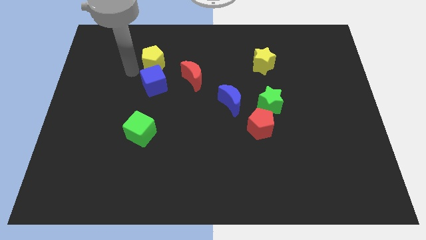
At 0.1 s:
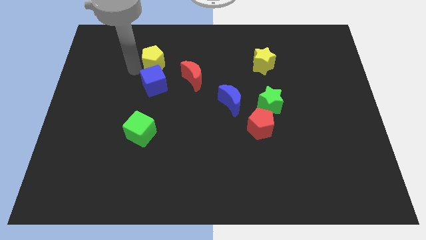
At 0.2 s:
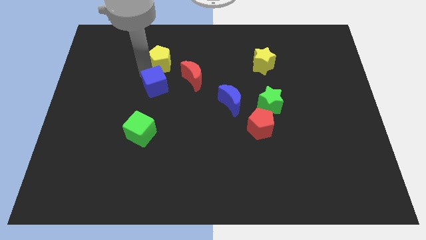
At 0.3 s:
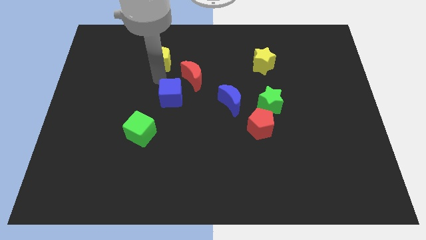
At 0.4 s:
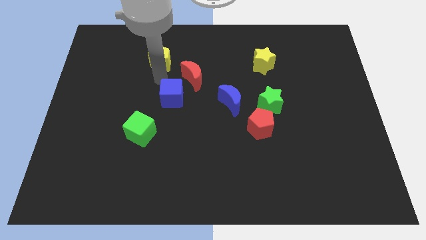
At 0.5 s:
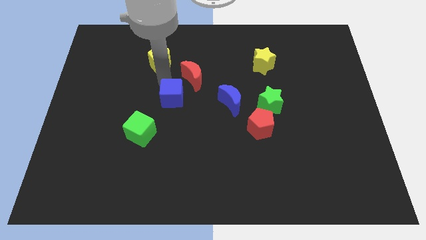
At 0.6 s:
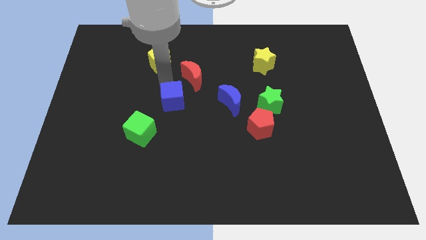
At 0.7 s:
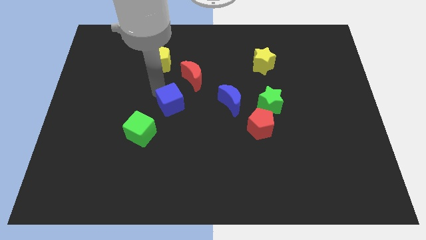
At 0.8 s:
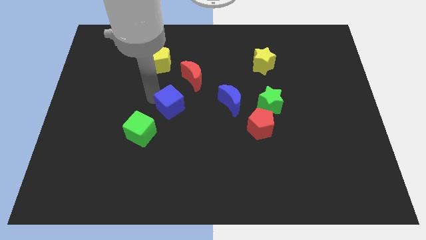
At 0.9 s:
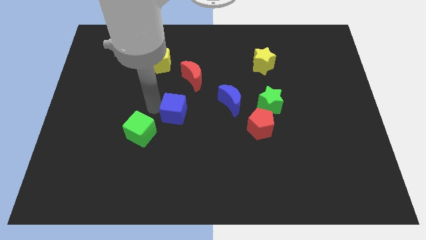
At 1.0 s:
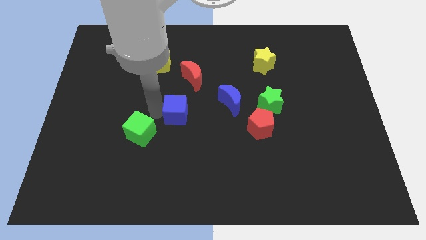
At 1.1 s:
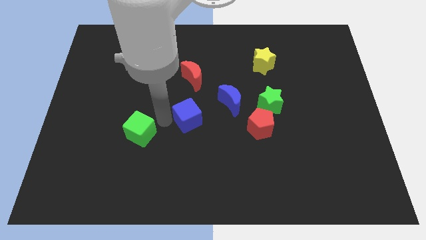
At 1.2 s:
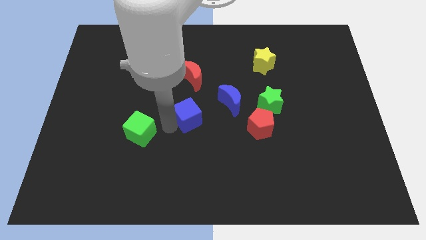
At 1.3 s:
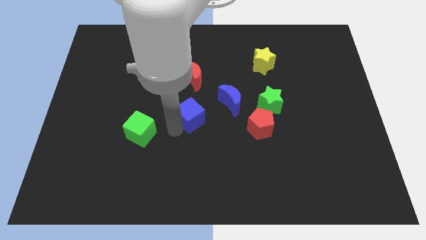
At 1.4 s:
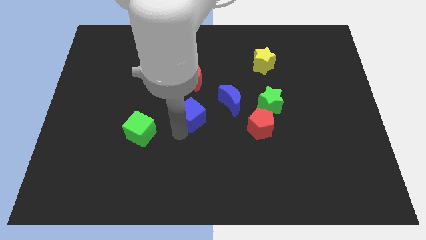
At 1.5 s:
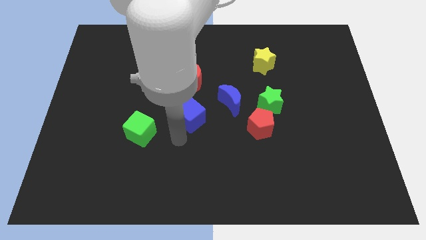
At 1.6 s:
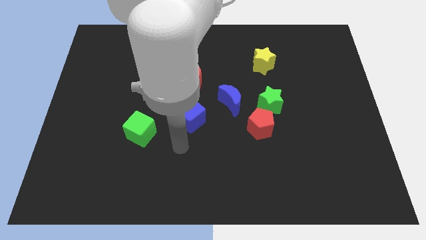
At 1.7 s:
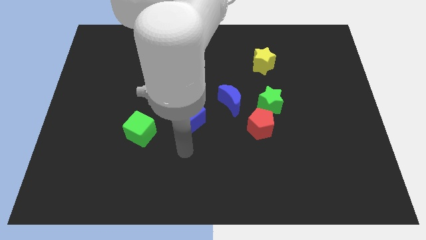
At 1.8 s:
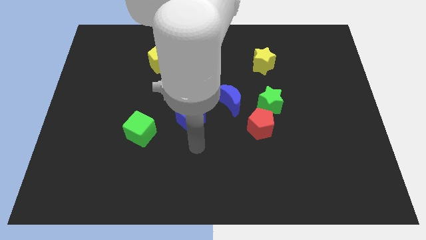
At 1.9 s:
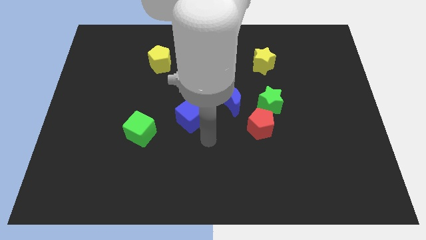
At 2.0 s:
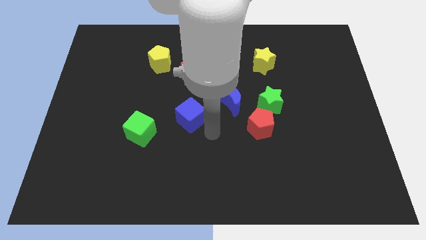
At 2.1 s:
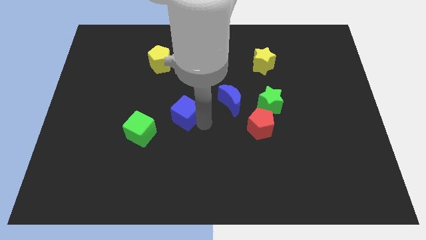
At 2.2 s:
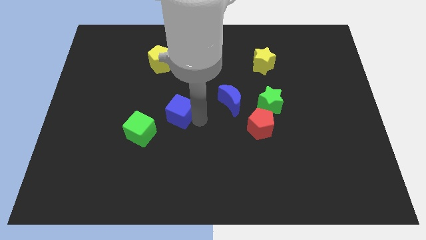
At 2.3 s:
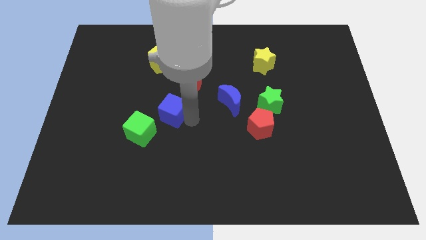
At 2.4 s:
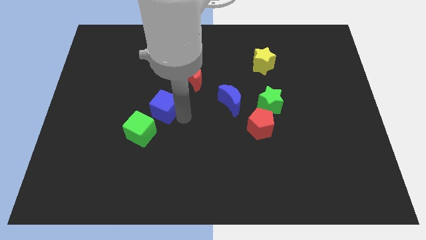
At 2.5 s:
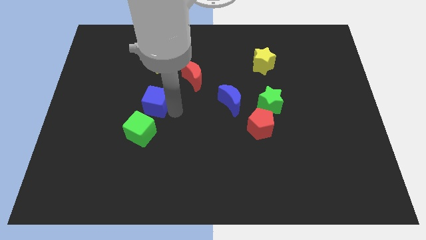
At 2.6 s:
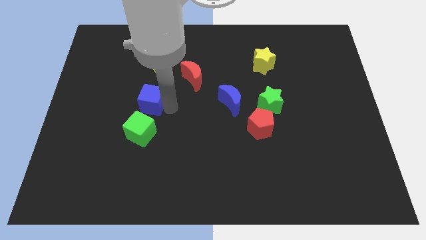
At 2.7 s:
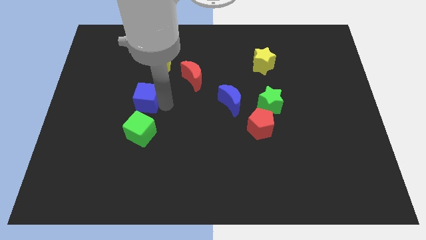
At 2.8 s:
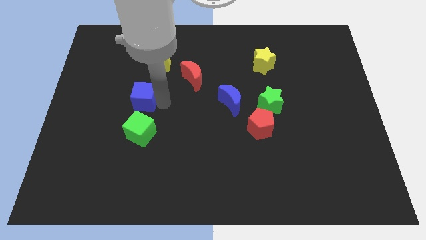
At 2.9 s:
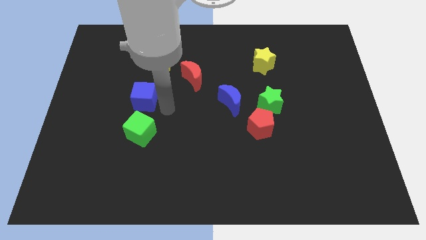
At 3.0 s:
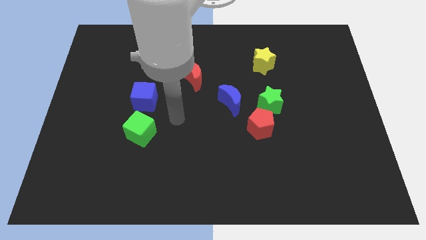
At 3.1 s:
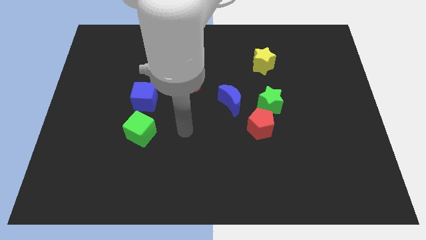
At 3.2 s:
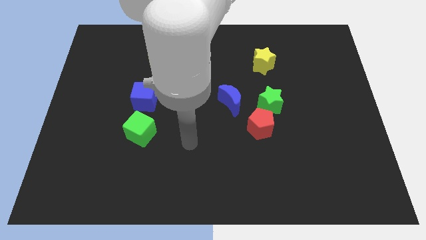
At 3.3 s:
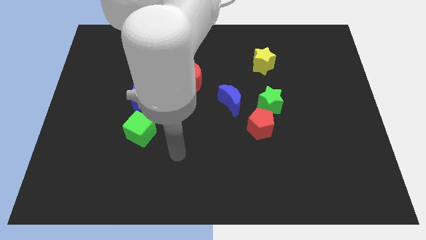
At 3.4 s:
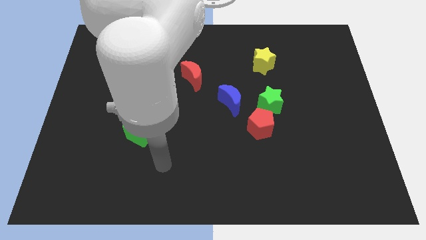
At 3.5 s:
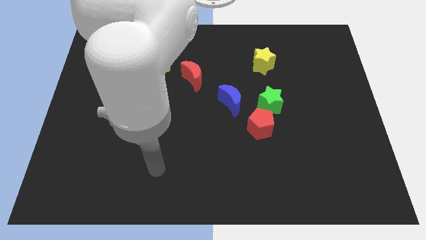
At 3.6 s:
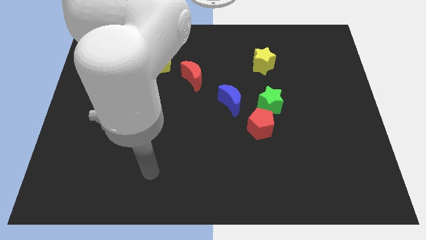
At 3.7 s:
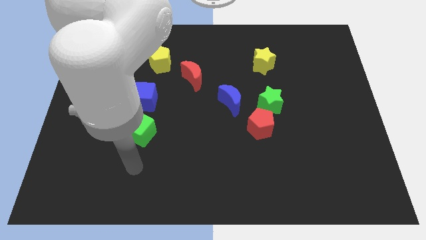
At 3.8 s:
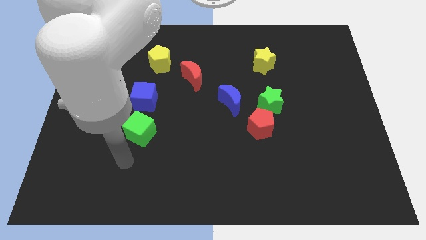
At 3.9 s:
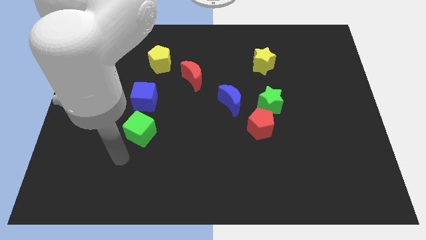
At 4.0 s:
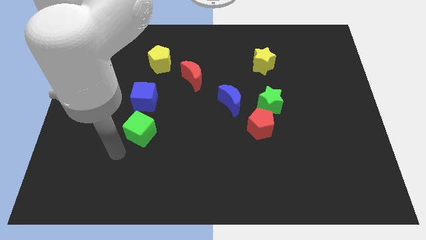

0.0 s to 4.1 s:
move the blue cube away from the yellow pentagon

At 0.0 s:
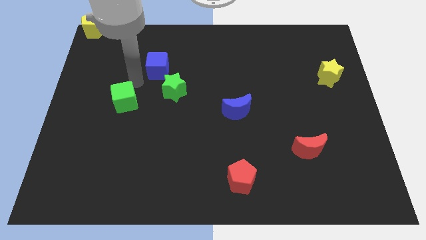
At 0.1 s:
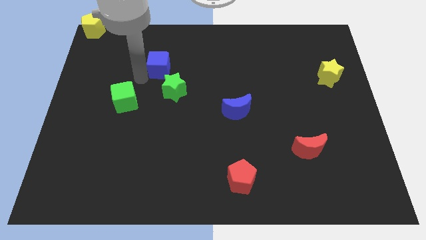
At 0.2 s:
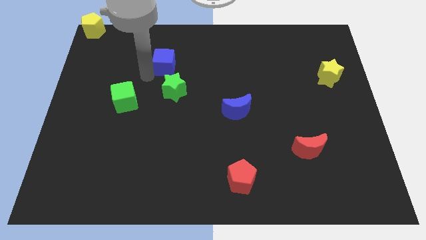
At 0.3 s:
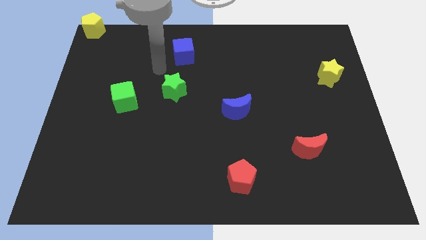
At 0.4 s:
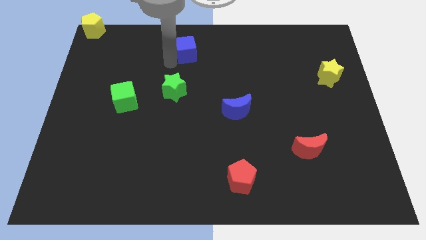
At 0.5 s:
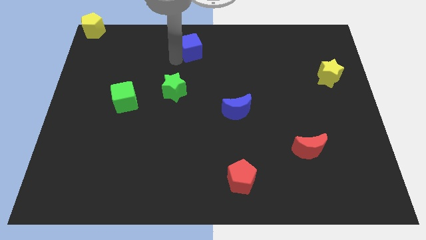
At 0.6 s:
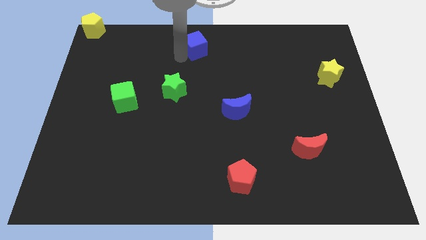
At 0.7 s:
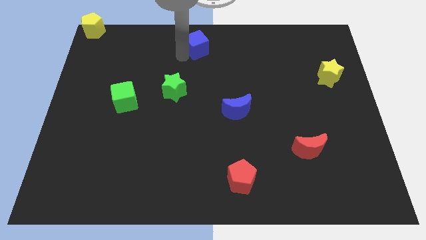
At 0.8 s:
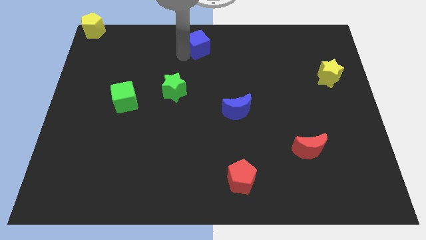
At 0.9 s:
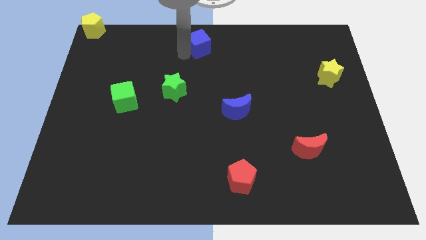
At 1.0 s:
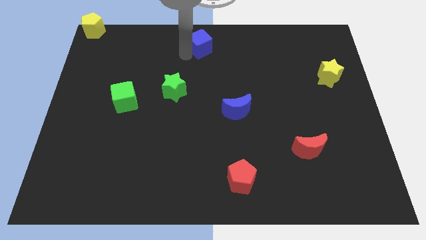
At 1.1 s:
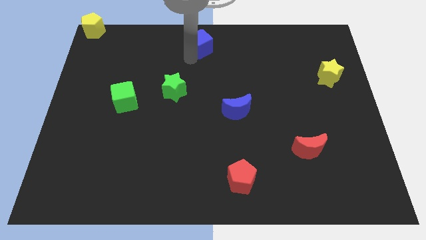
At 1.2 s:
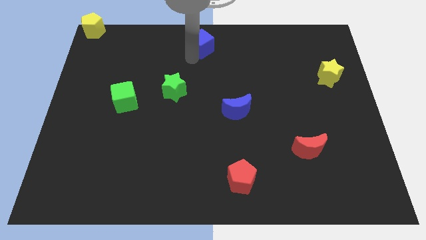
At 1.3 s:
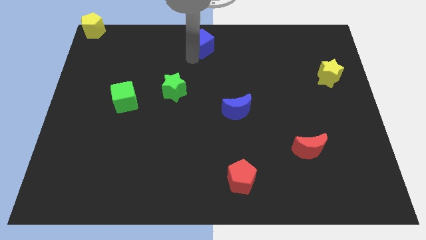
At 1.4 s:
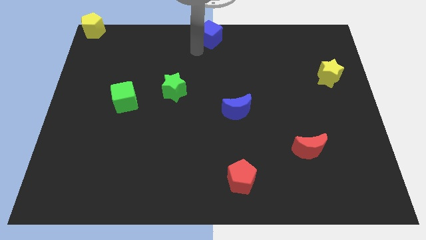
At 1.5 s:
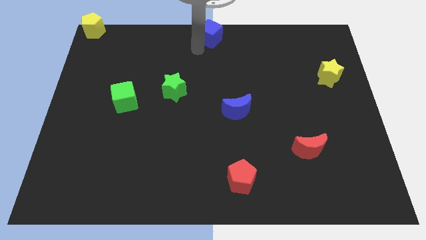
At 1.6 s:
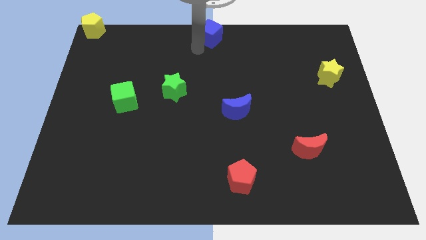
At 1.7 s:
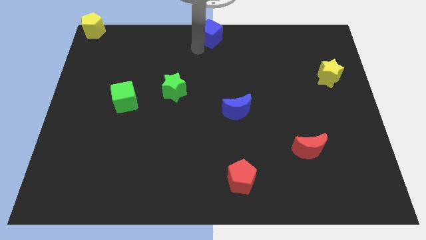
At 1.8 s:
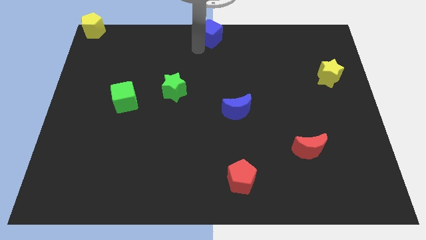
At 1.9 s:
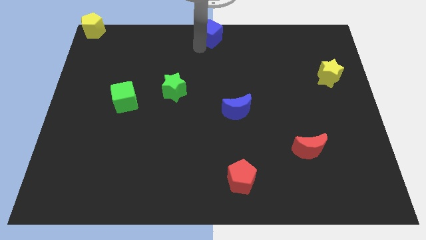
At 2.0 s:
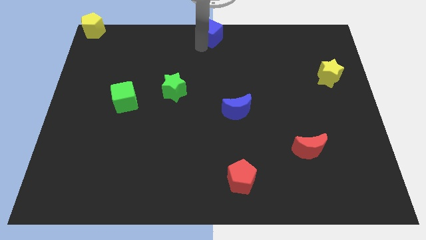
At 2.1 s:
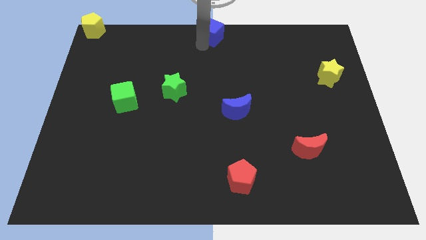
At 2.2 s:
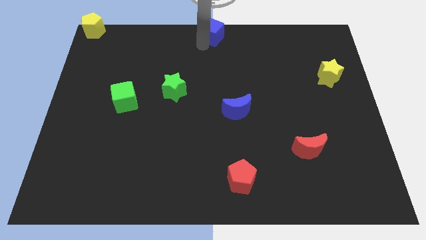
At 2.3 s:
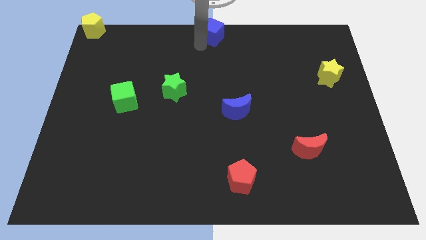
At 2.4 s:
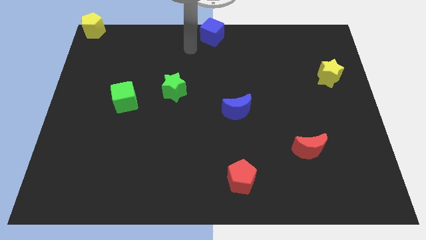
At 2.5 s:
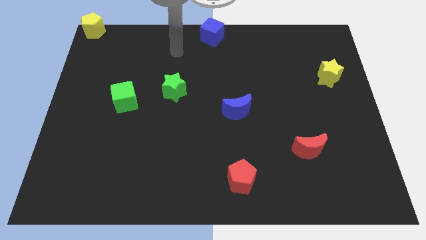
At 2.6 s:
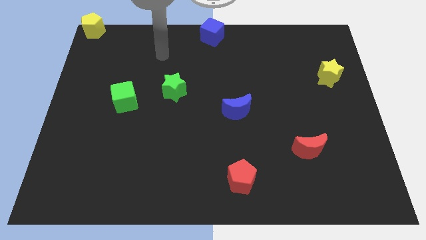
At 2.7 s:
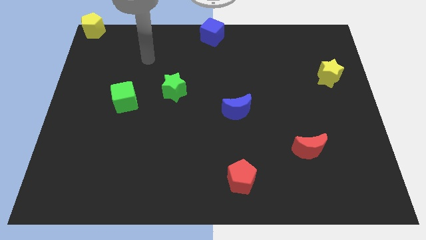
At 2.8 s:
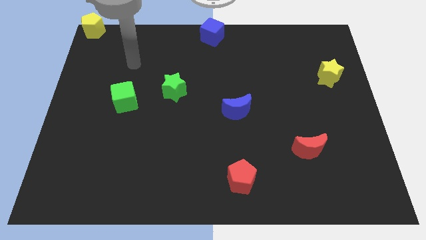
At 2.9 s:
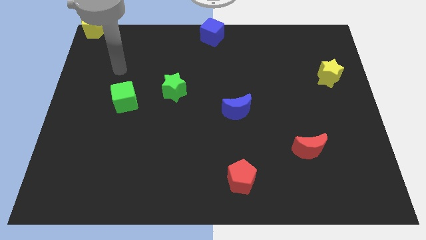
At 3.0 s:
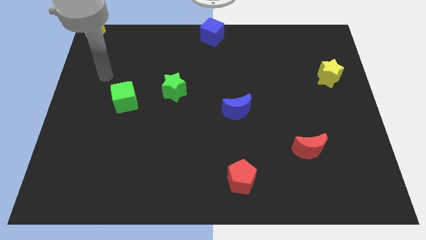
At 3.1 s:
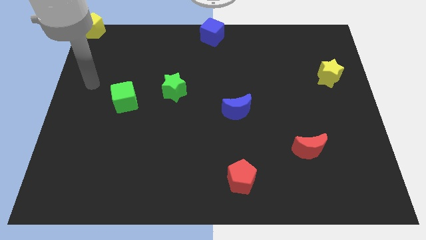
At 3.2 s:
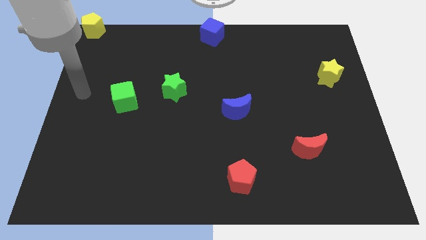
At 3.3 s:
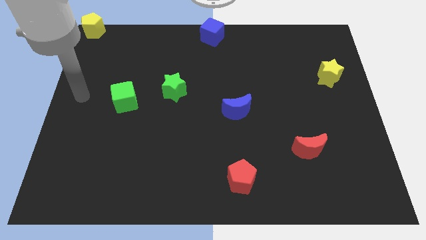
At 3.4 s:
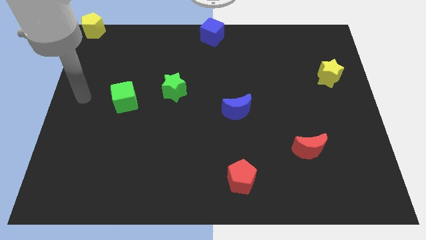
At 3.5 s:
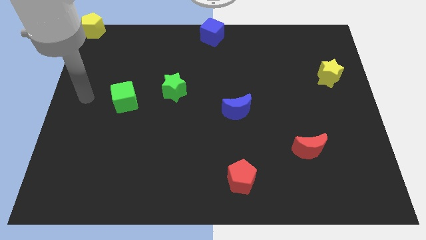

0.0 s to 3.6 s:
push the blue cube to the top center of the board

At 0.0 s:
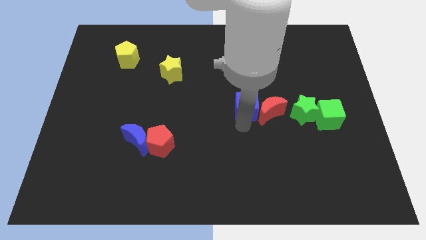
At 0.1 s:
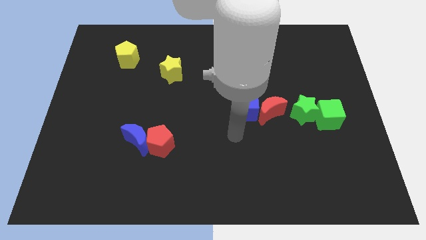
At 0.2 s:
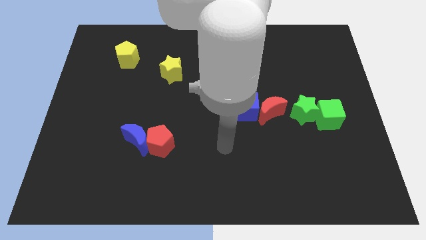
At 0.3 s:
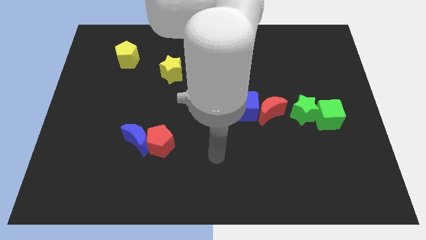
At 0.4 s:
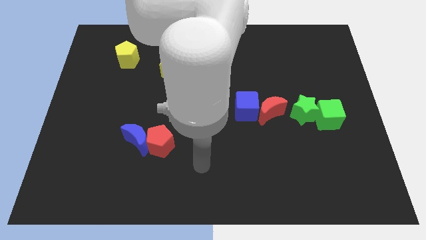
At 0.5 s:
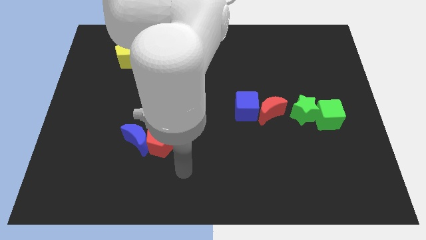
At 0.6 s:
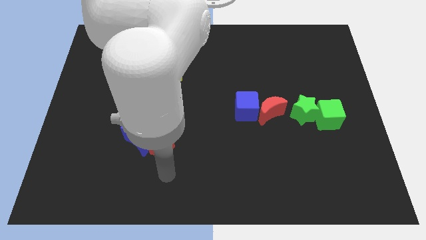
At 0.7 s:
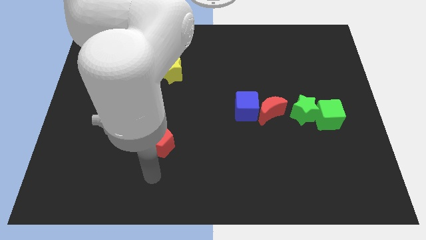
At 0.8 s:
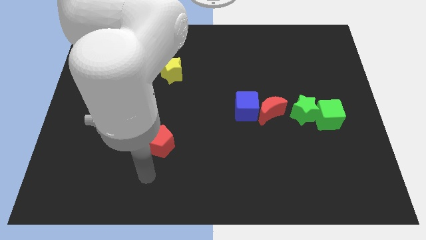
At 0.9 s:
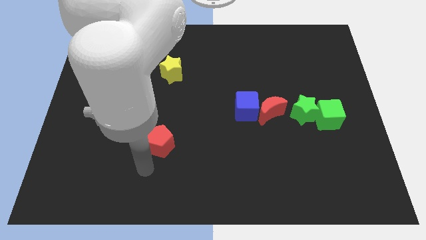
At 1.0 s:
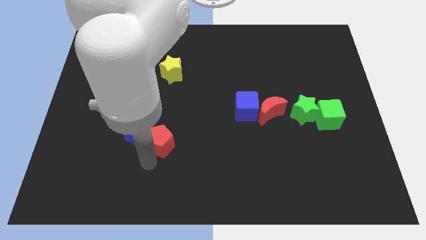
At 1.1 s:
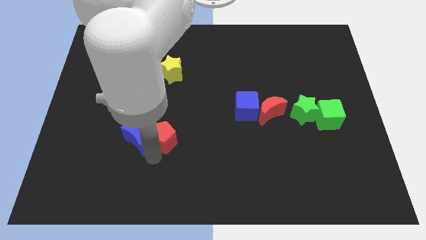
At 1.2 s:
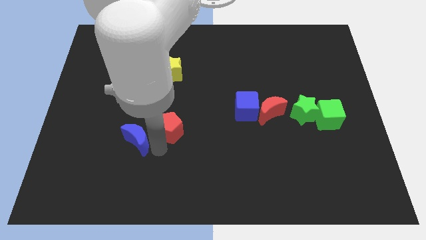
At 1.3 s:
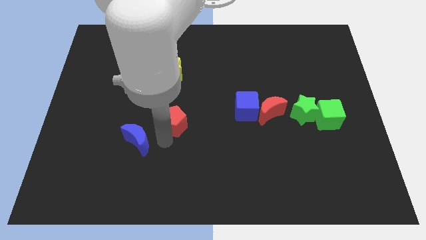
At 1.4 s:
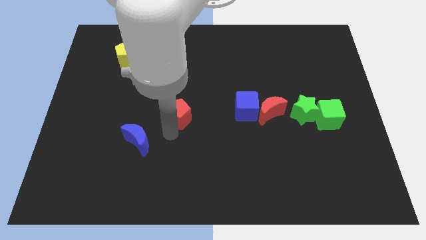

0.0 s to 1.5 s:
separate the red pentagon from the blue moon
